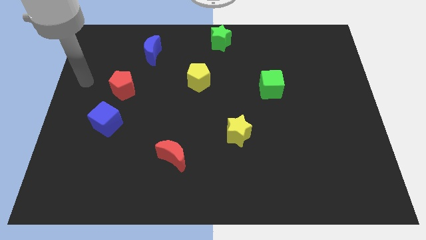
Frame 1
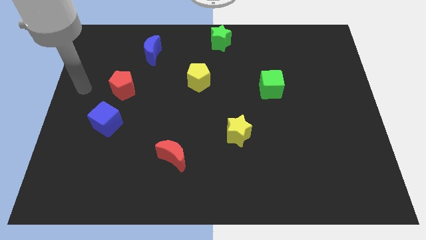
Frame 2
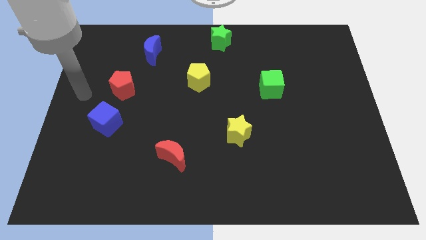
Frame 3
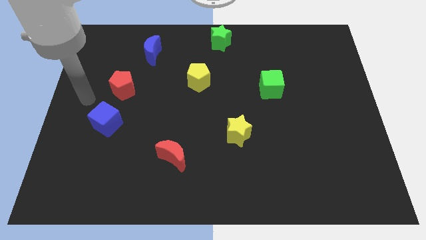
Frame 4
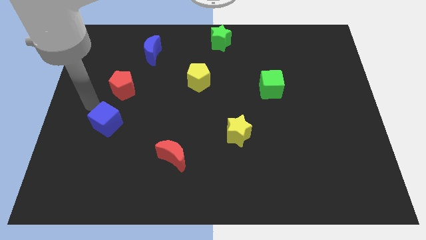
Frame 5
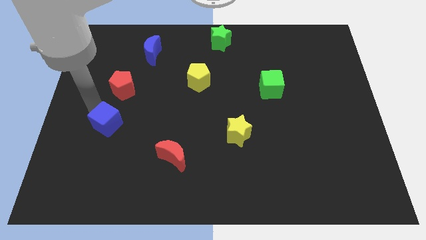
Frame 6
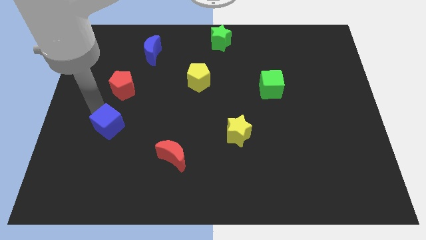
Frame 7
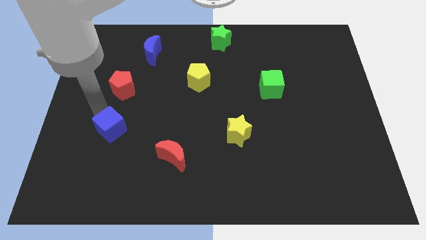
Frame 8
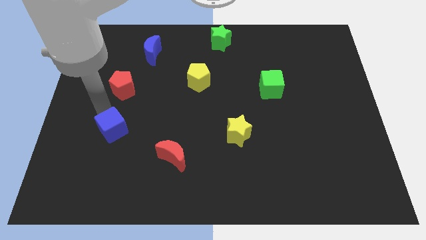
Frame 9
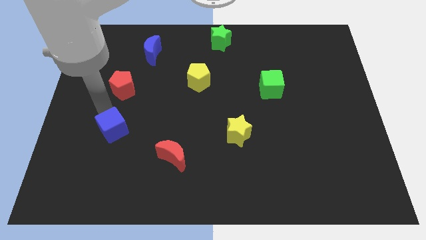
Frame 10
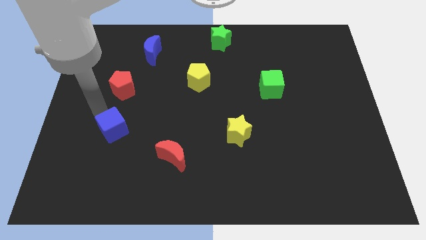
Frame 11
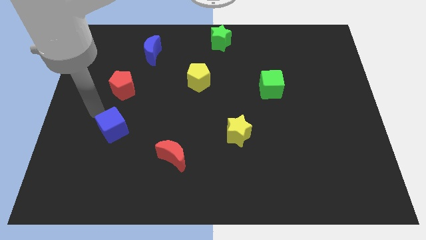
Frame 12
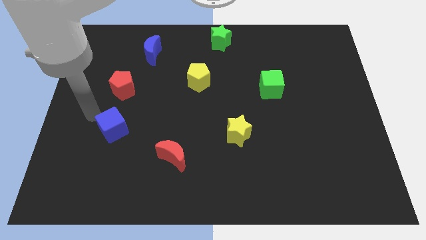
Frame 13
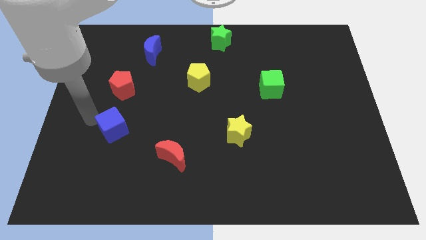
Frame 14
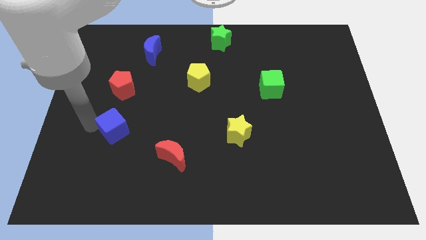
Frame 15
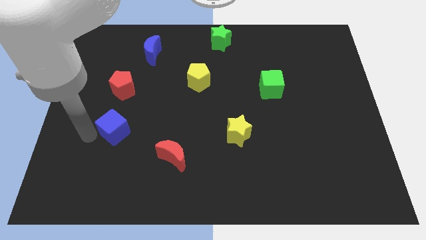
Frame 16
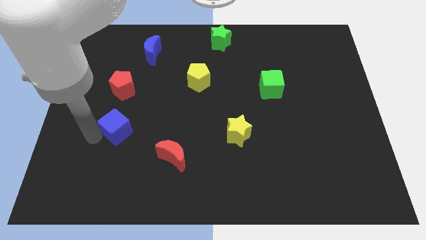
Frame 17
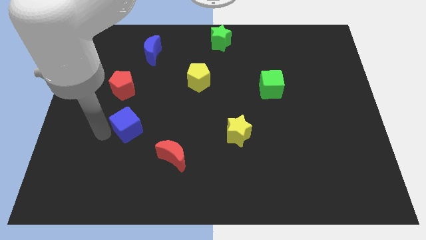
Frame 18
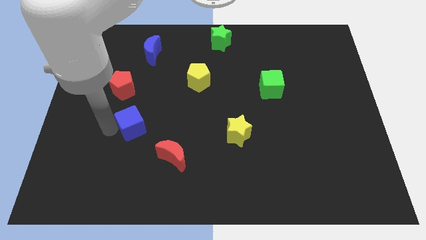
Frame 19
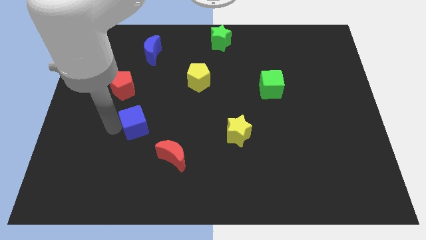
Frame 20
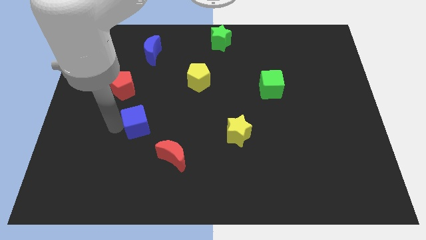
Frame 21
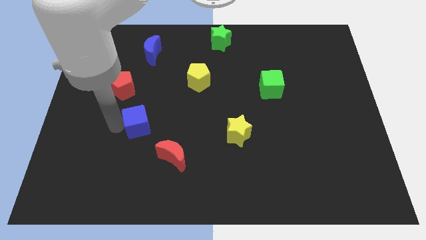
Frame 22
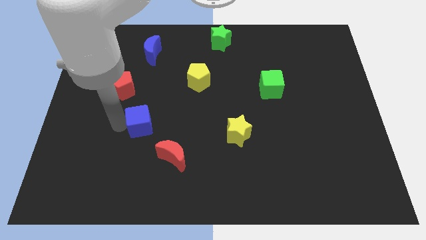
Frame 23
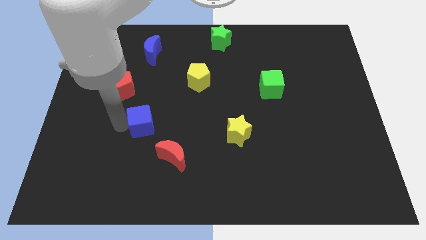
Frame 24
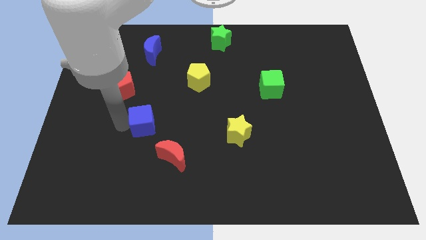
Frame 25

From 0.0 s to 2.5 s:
move the blue cube between red pentagon and red moon

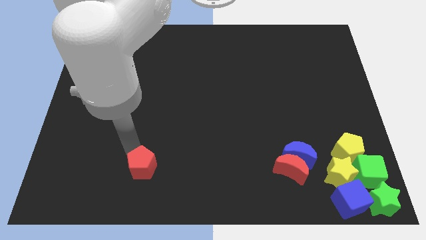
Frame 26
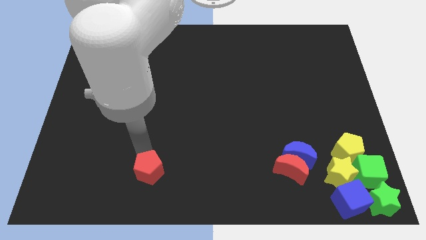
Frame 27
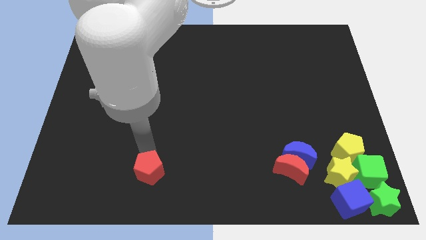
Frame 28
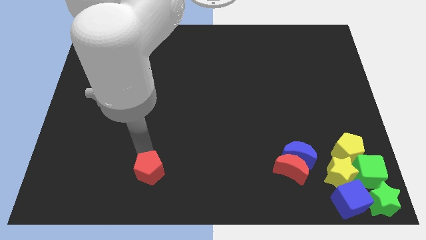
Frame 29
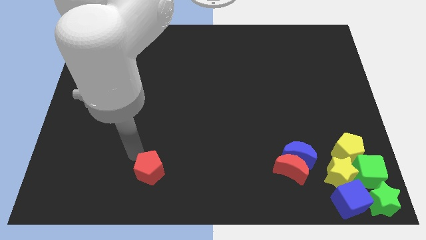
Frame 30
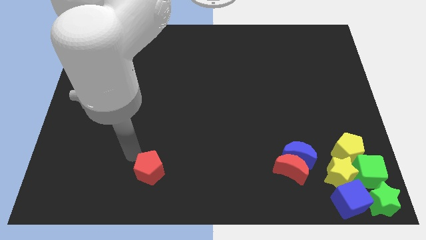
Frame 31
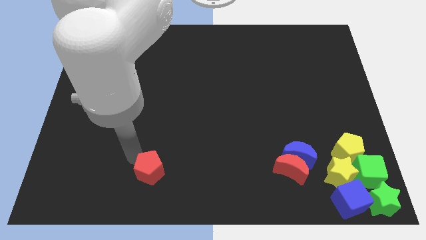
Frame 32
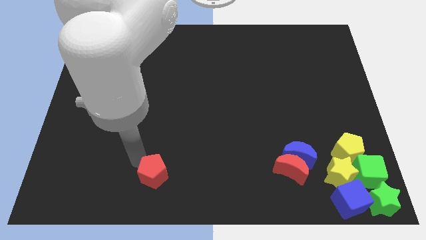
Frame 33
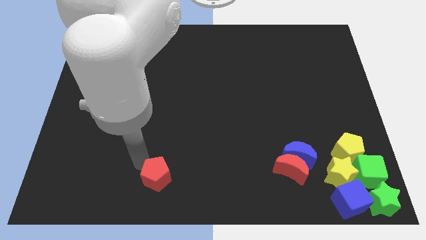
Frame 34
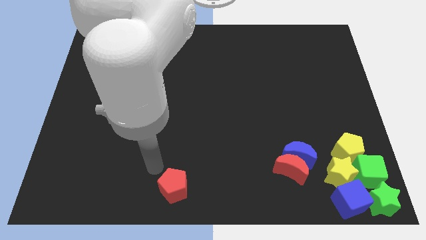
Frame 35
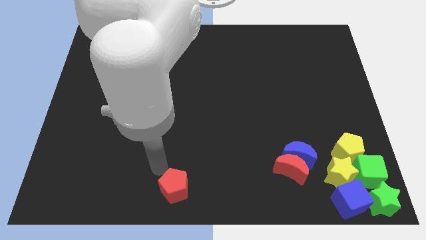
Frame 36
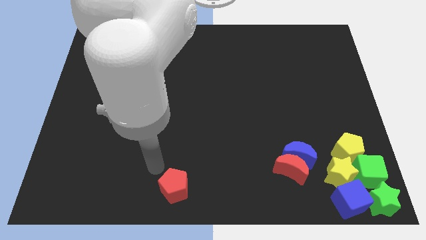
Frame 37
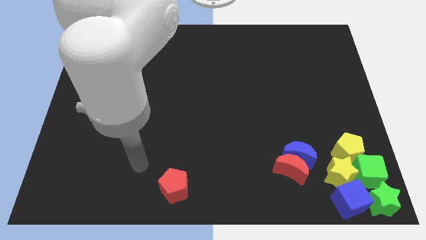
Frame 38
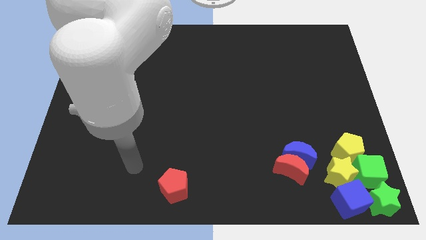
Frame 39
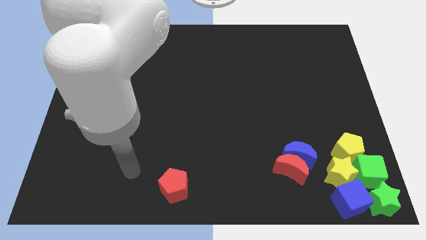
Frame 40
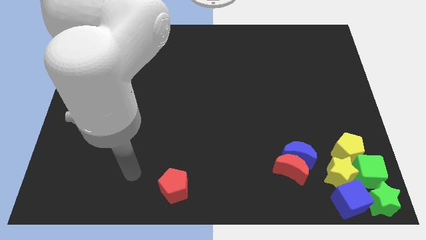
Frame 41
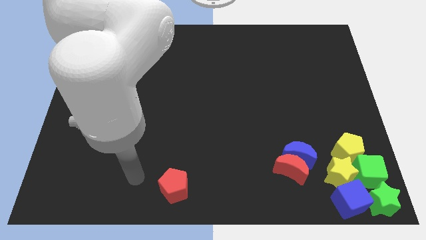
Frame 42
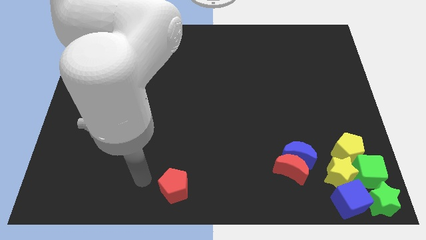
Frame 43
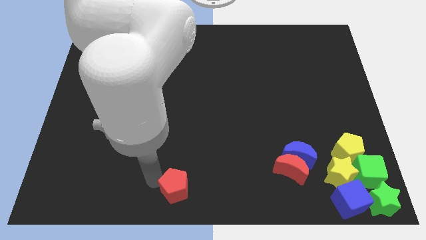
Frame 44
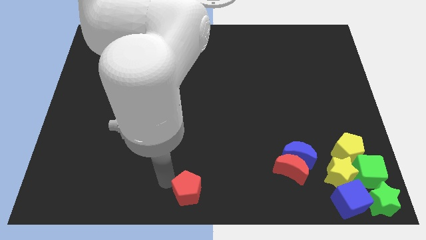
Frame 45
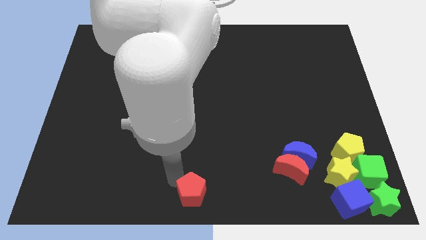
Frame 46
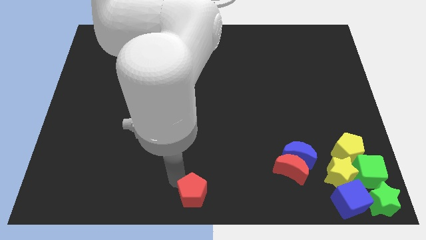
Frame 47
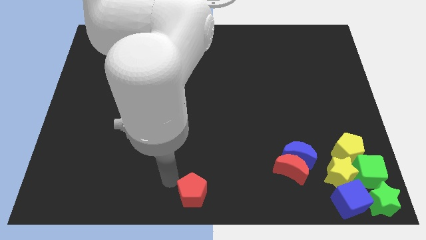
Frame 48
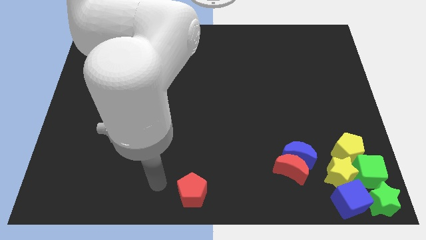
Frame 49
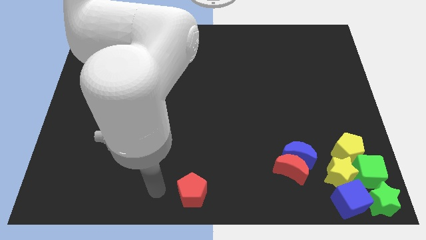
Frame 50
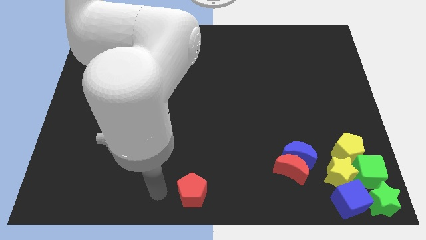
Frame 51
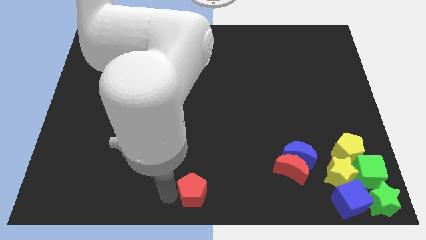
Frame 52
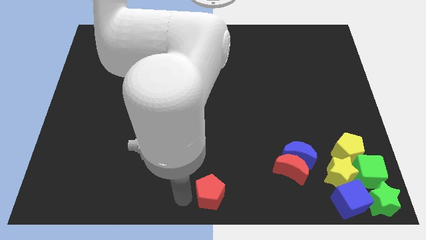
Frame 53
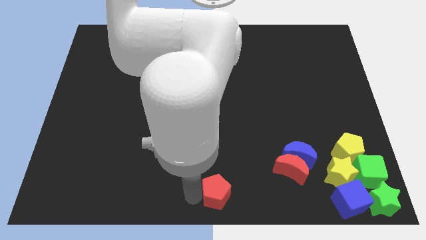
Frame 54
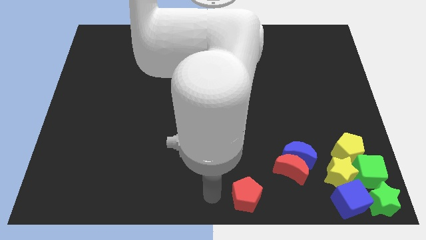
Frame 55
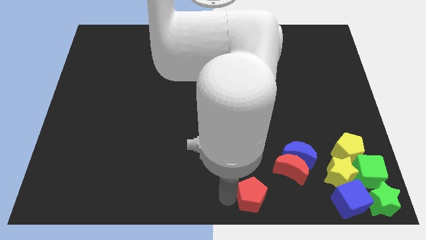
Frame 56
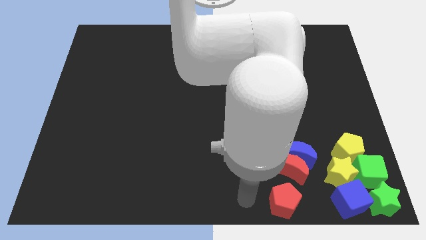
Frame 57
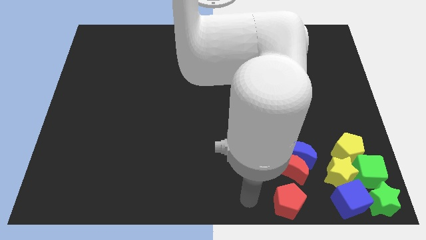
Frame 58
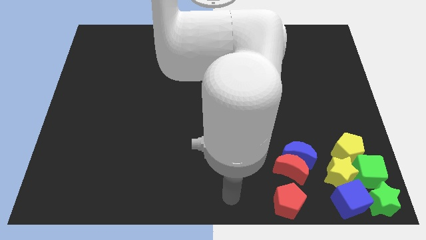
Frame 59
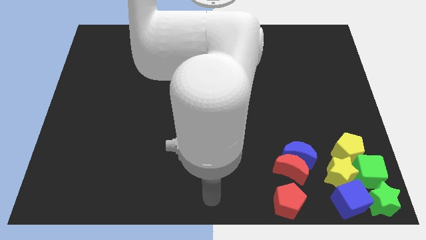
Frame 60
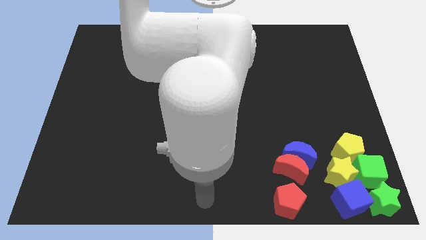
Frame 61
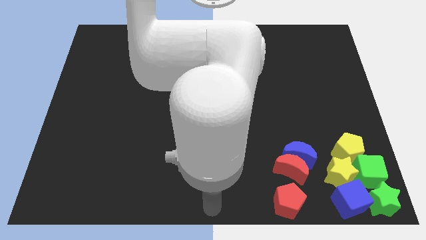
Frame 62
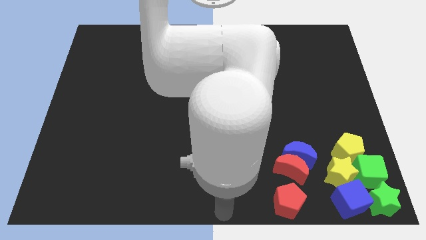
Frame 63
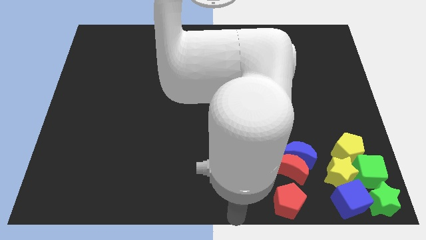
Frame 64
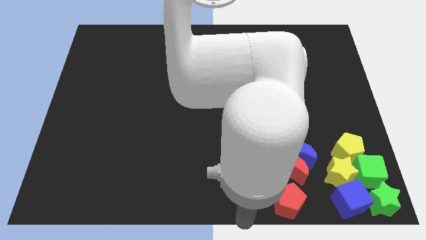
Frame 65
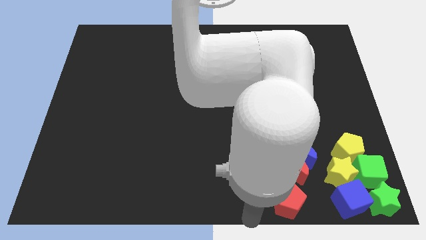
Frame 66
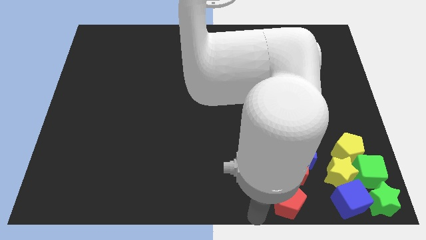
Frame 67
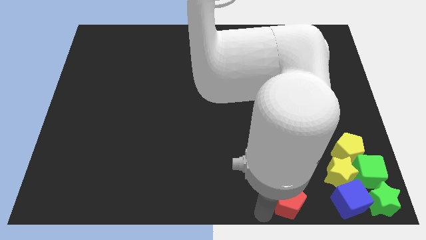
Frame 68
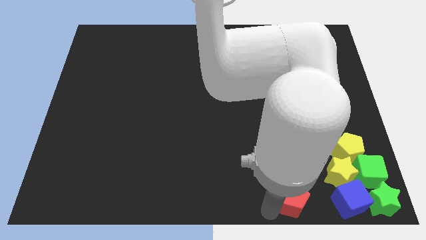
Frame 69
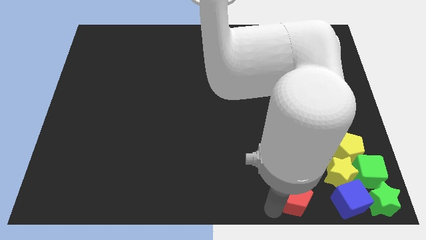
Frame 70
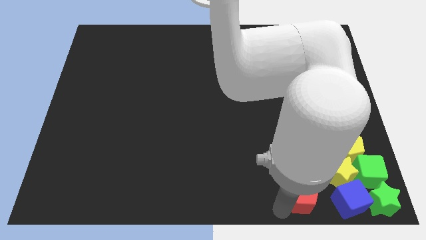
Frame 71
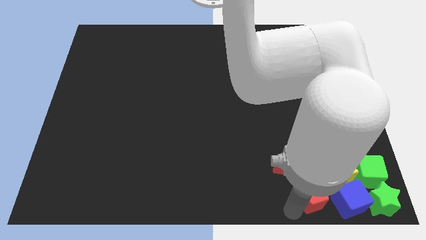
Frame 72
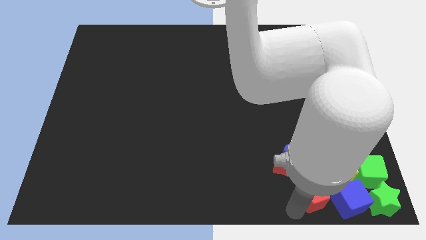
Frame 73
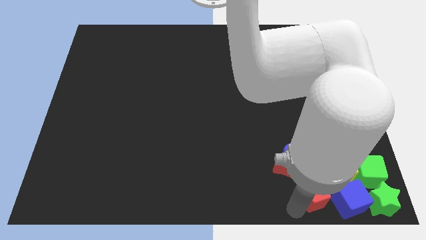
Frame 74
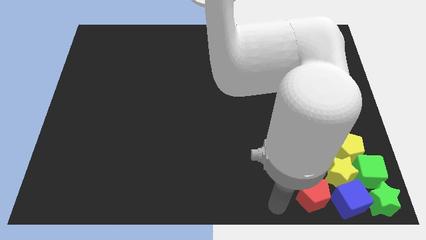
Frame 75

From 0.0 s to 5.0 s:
place the red pentagon towards the bottom right side of the red crescent

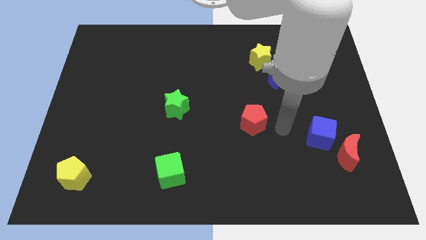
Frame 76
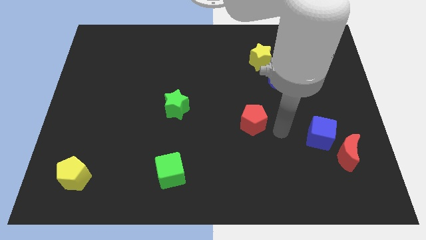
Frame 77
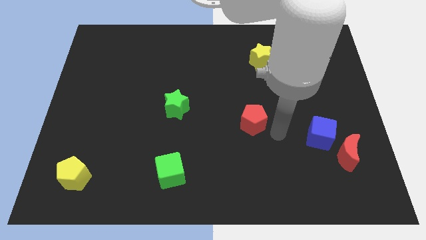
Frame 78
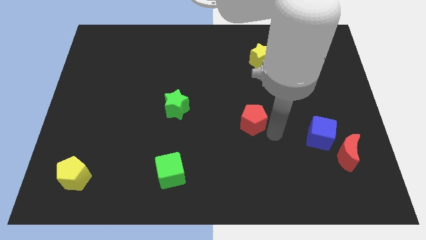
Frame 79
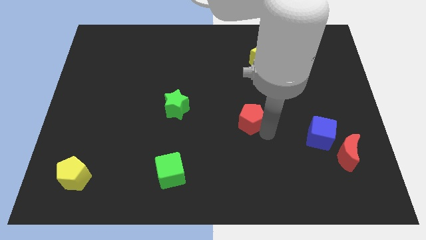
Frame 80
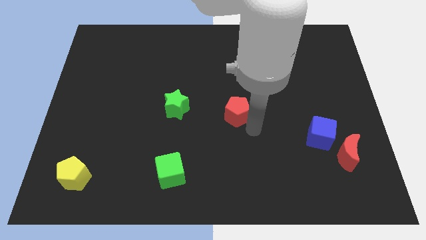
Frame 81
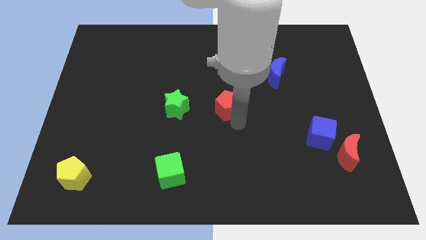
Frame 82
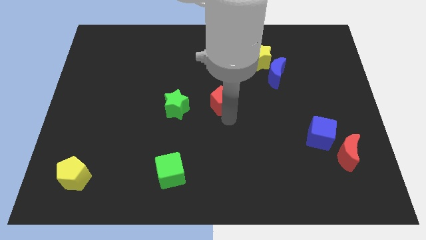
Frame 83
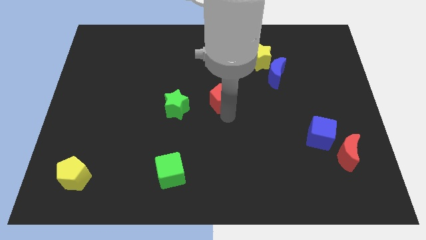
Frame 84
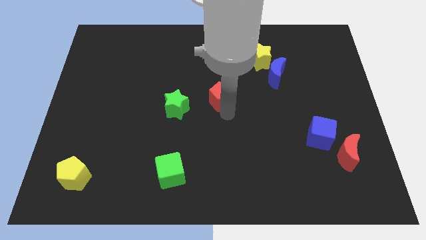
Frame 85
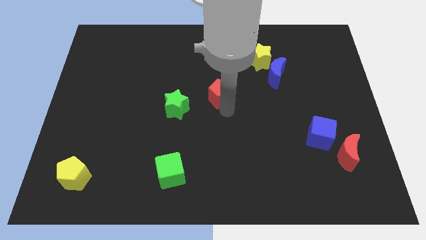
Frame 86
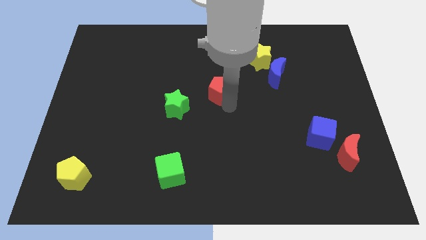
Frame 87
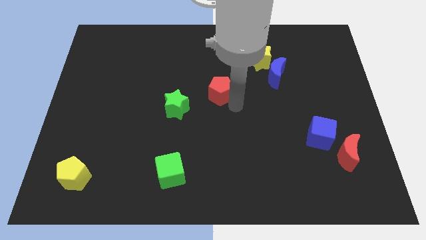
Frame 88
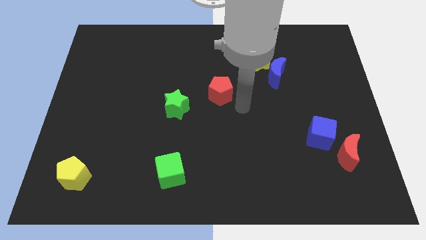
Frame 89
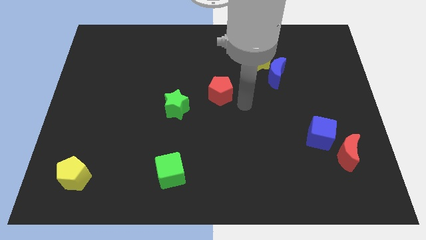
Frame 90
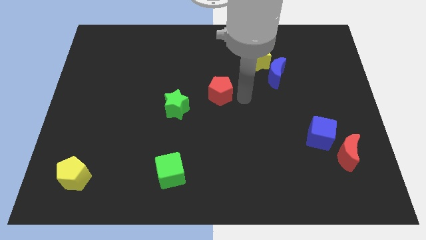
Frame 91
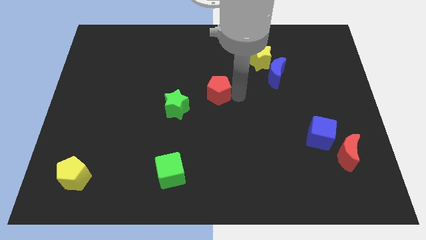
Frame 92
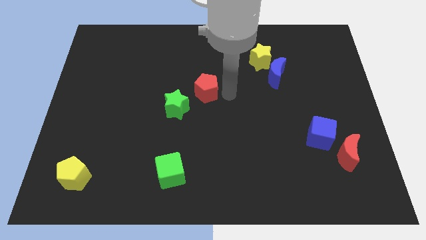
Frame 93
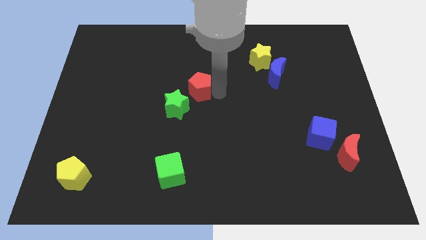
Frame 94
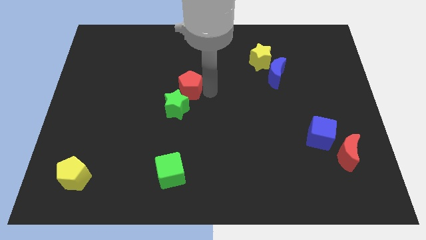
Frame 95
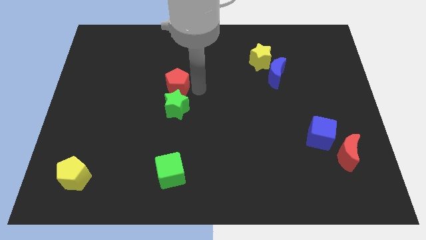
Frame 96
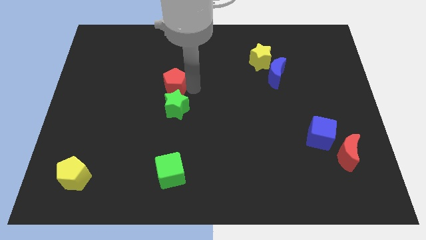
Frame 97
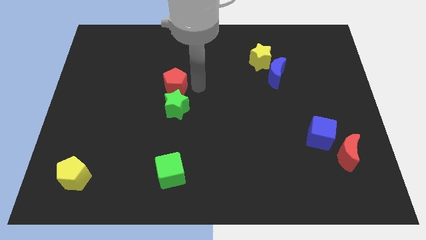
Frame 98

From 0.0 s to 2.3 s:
move the red pentagon above the green star
